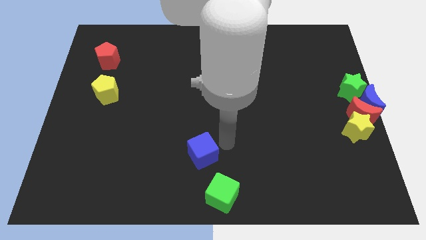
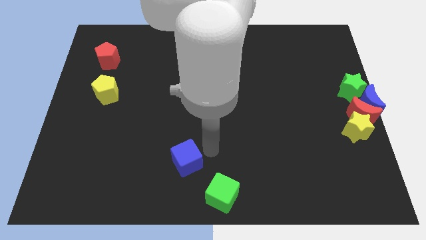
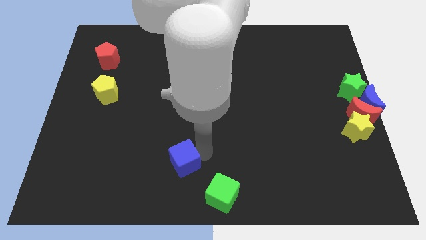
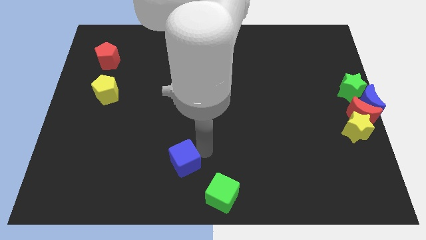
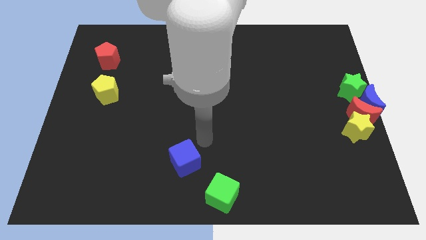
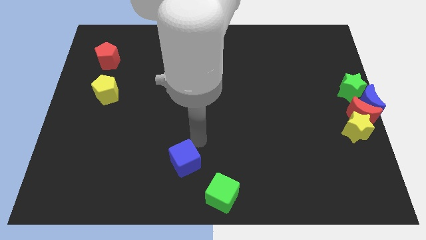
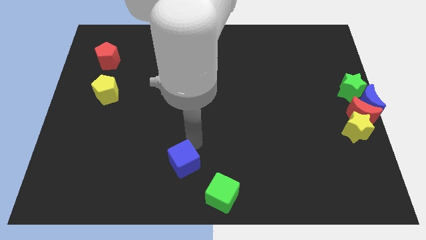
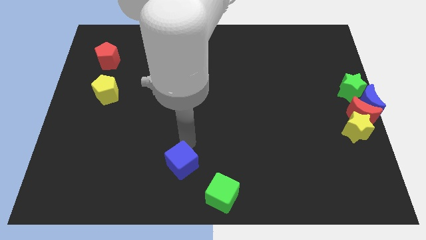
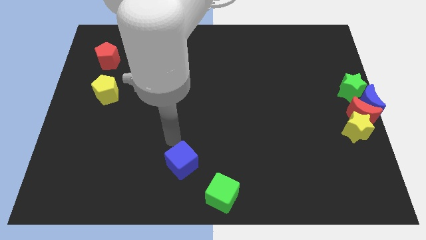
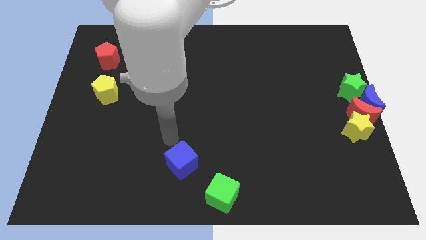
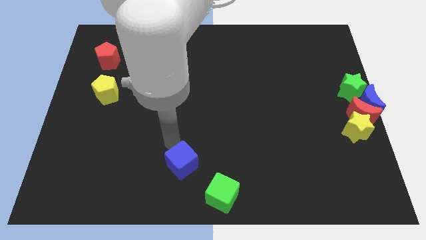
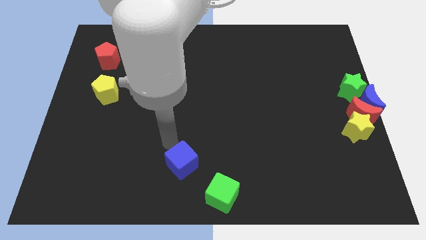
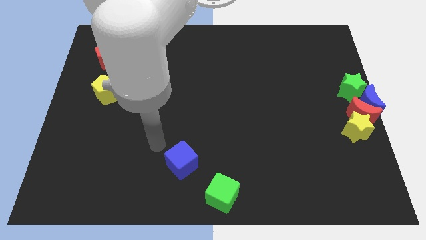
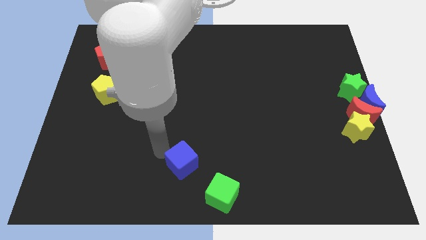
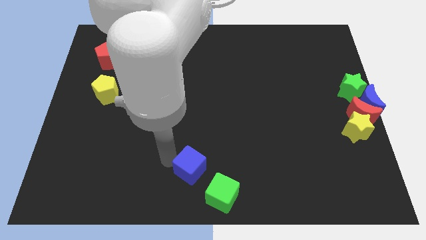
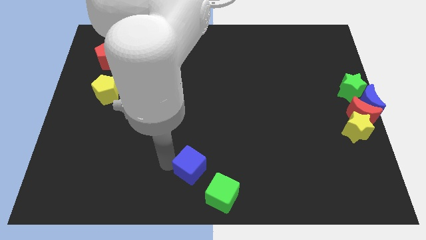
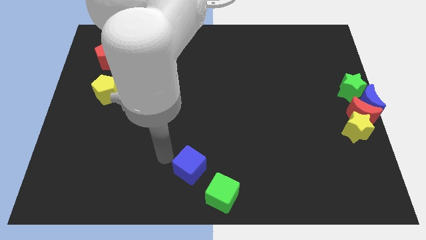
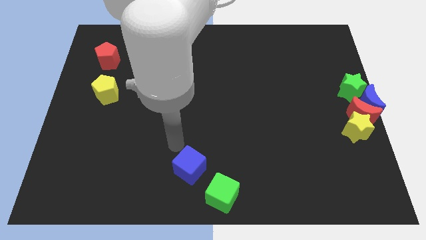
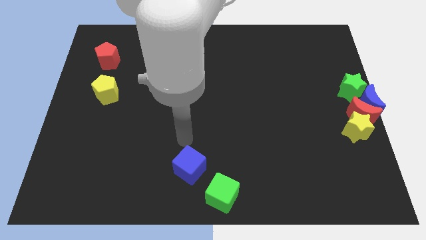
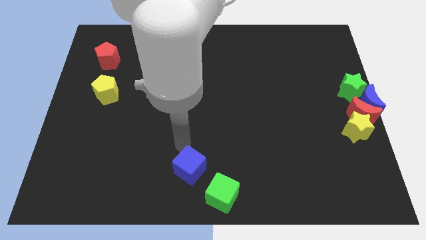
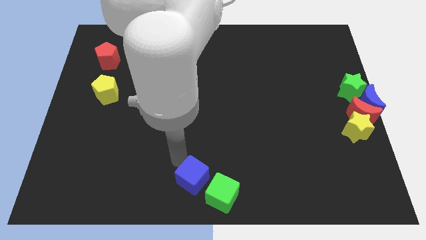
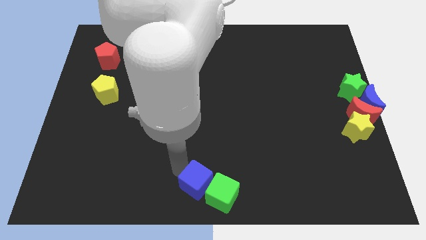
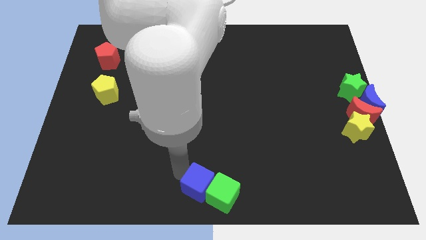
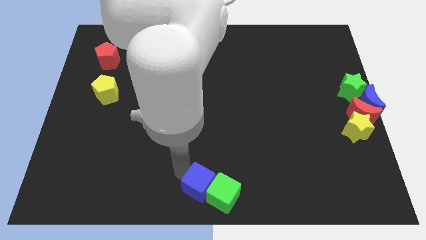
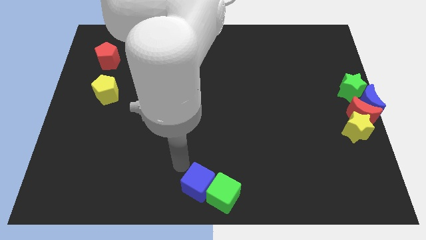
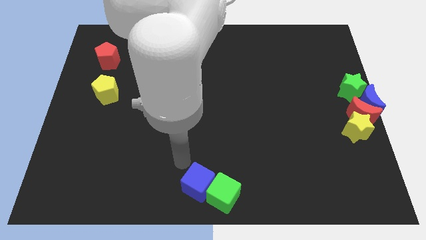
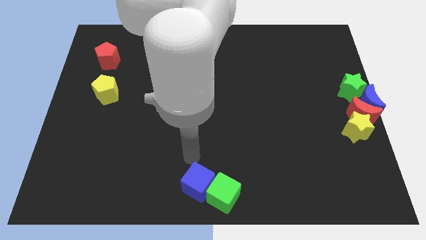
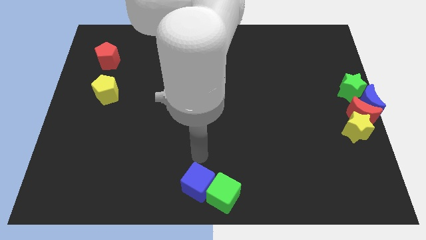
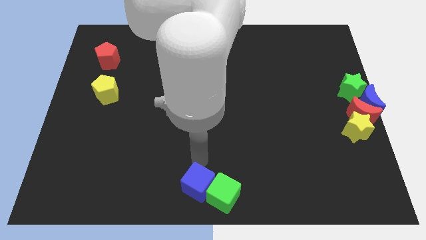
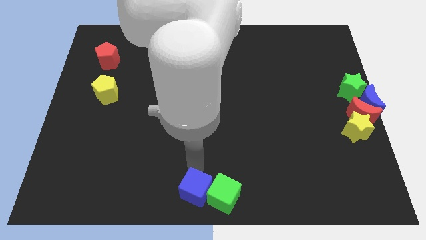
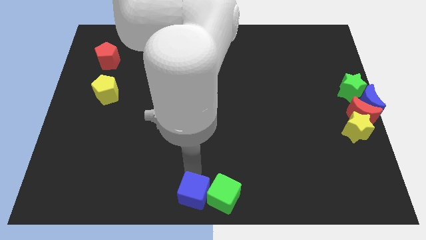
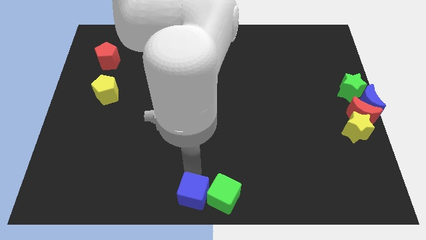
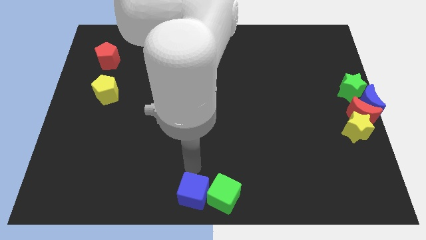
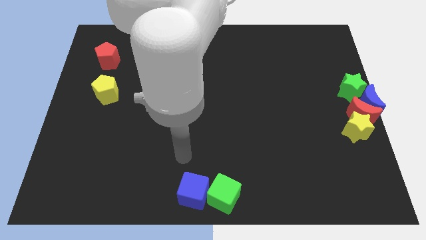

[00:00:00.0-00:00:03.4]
move the blue cube left to the green cube

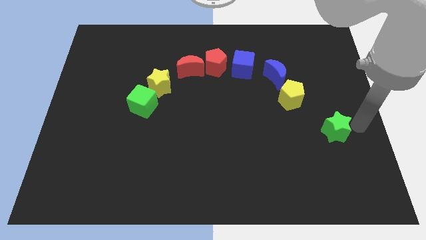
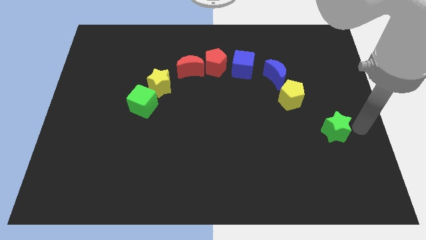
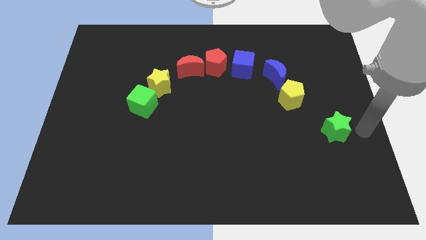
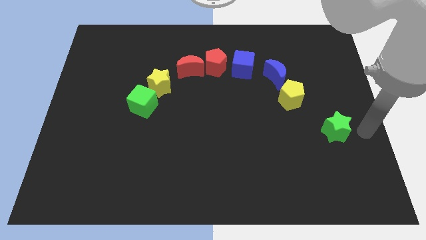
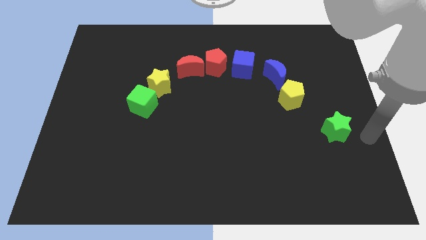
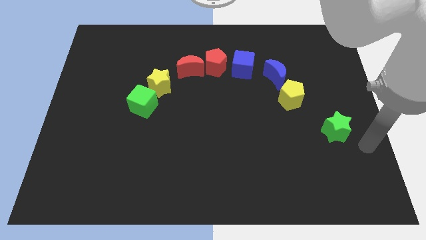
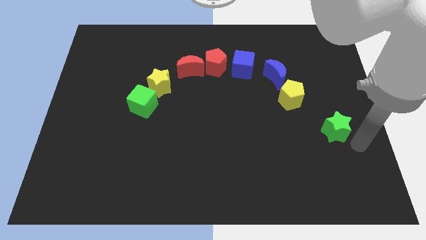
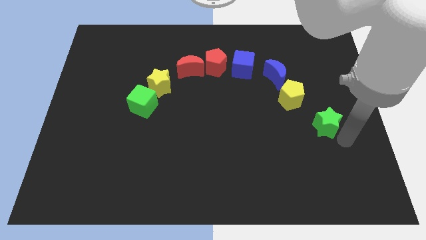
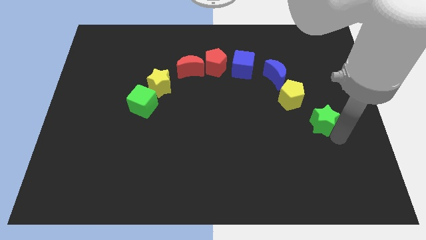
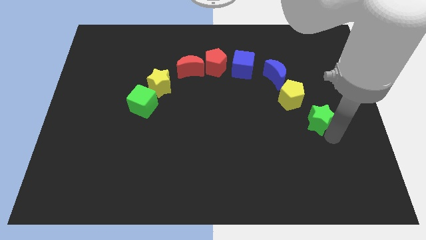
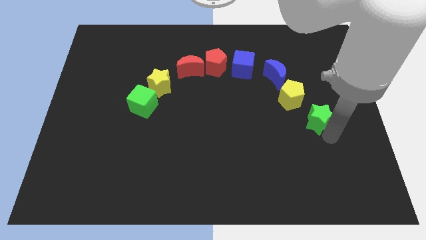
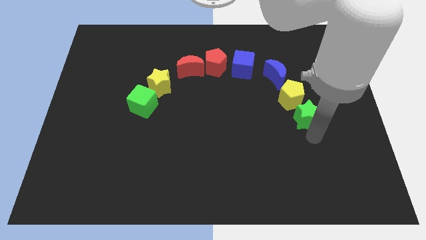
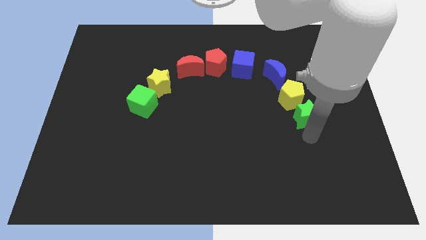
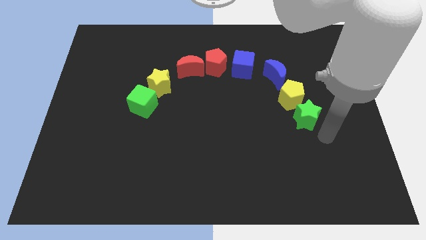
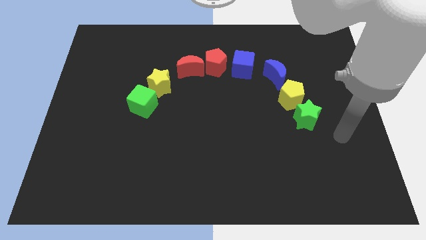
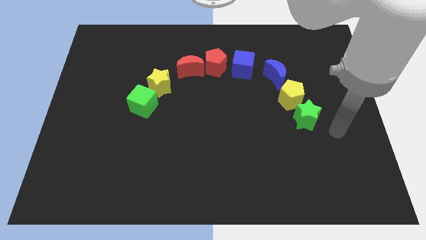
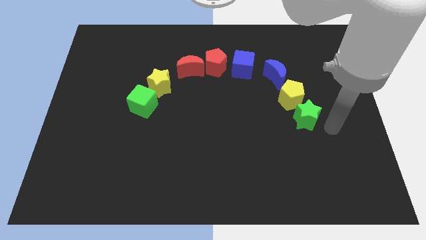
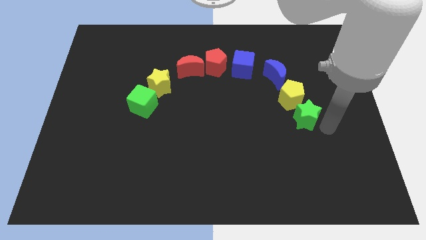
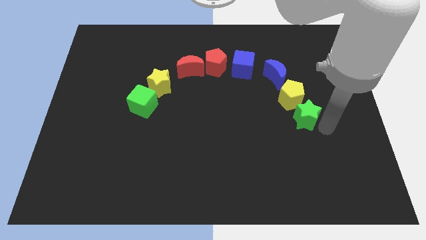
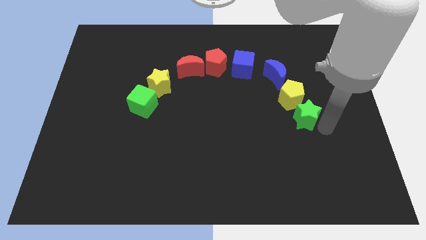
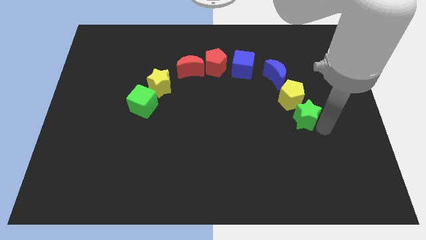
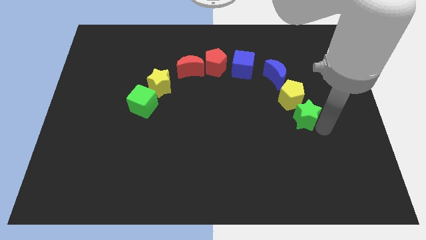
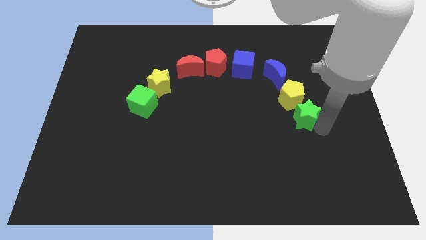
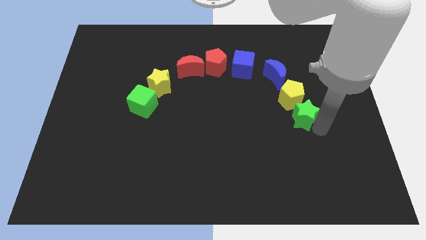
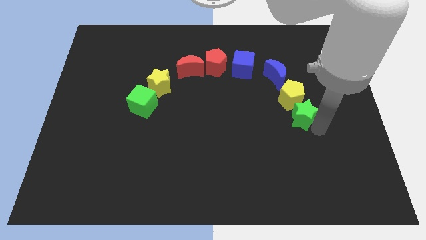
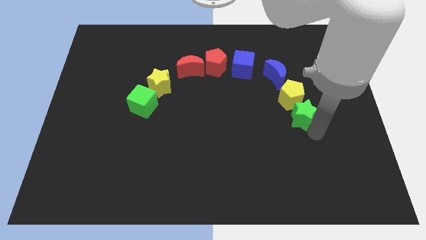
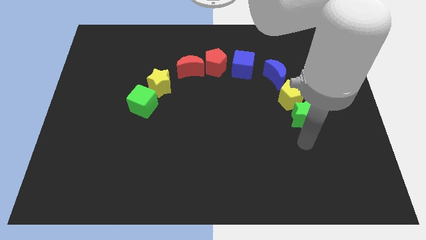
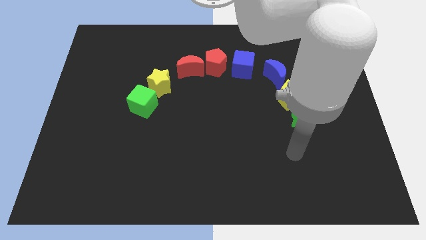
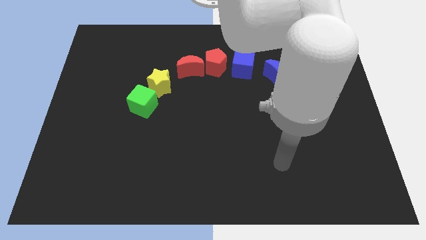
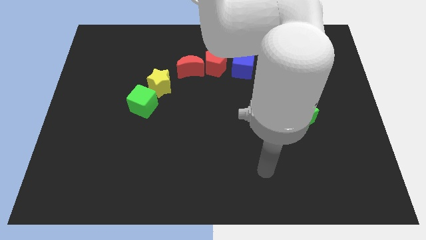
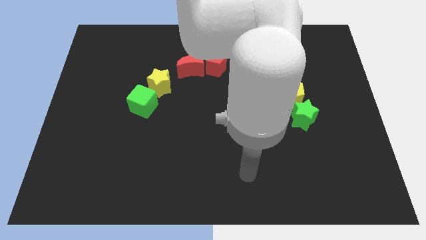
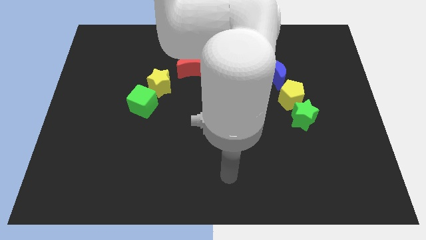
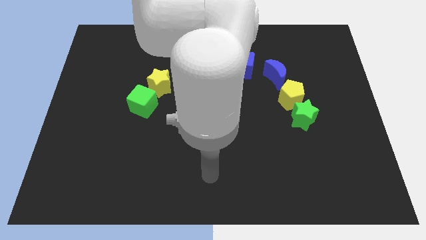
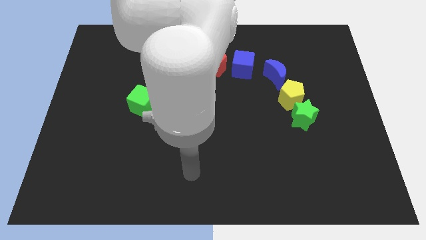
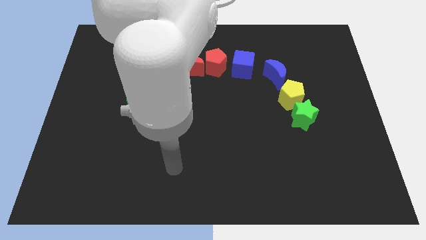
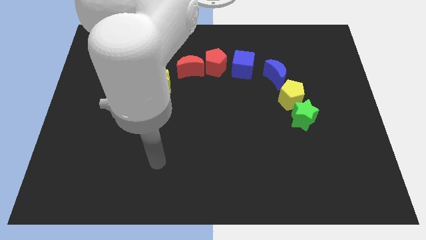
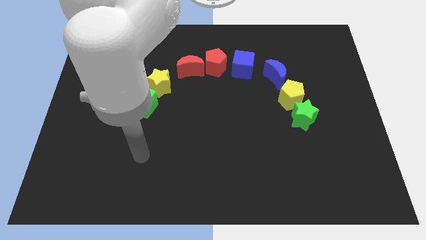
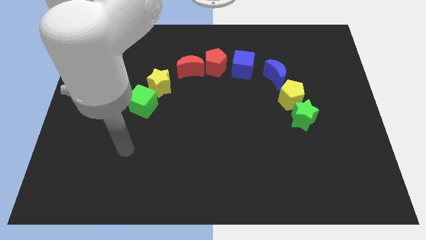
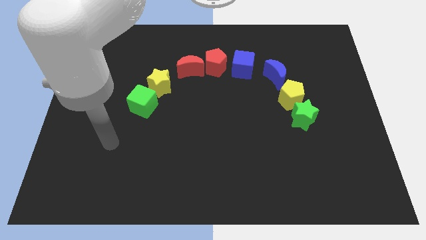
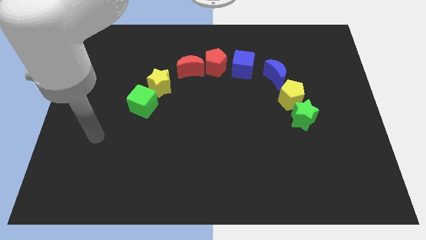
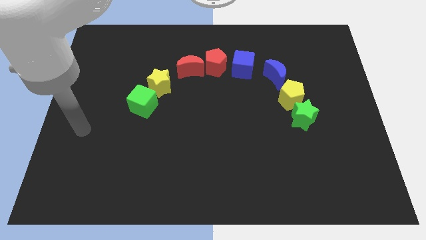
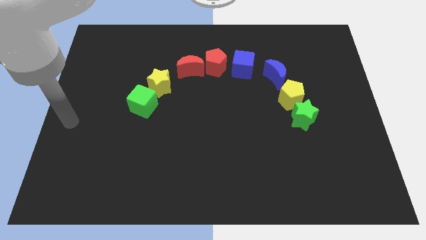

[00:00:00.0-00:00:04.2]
slide the green star below the yellow pentagon

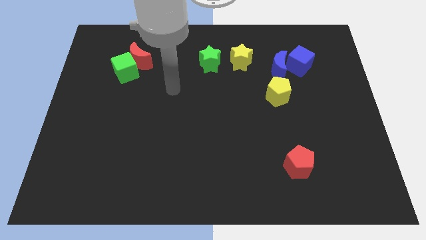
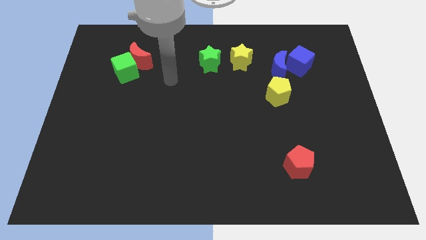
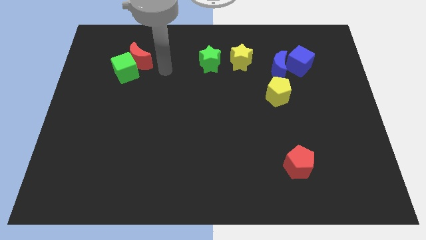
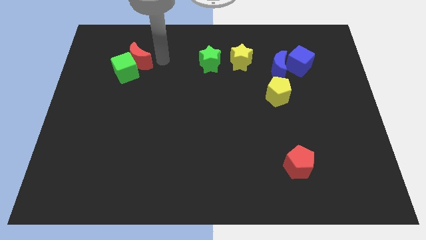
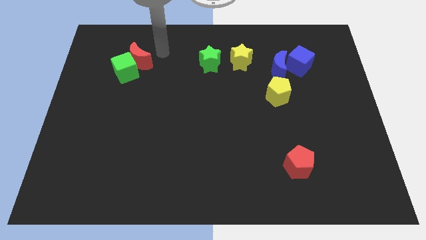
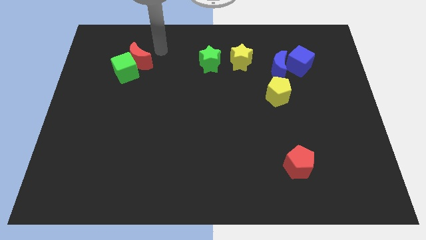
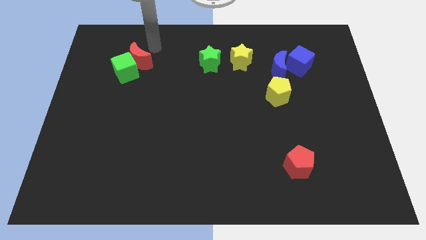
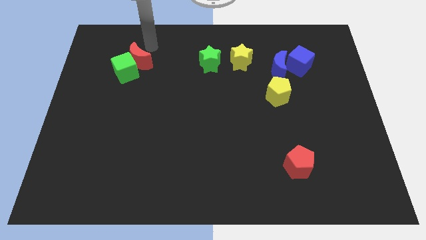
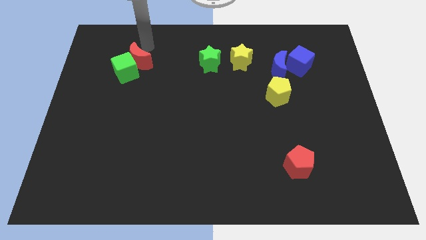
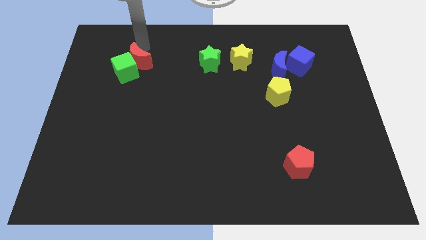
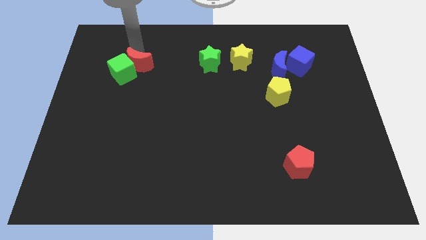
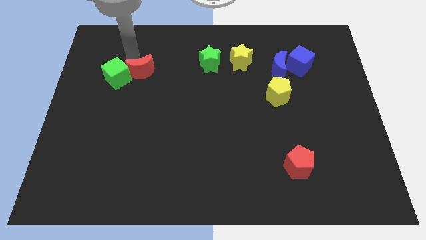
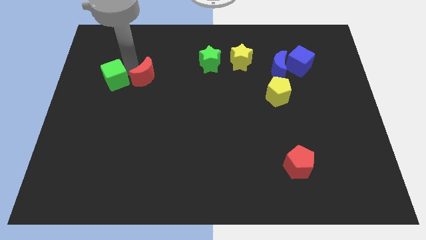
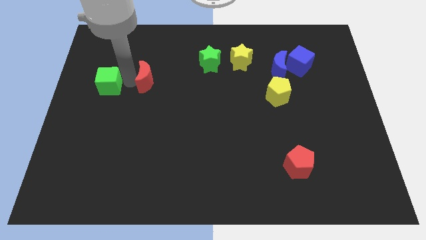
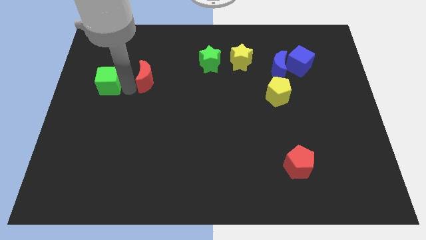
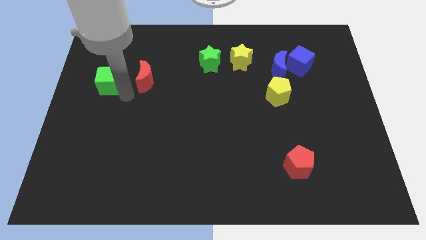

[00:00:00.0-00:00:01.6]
put the red moon above the green cube
